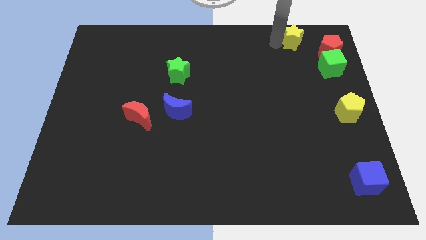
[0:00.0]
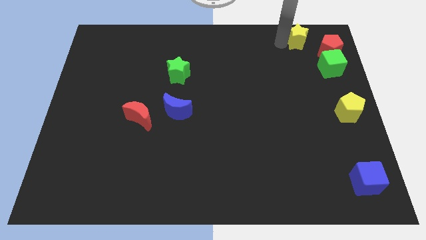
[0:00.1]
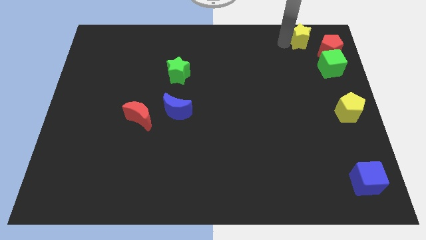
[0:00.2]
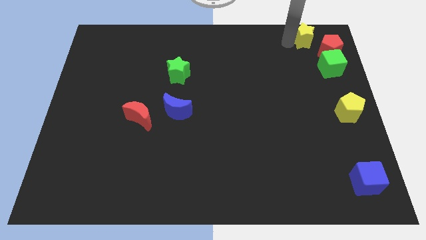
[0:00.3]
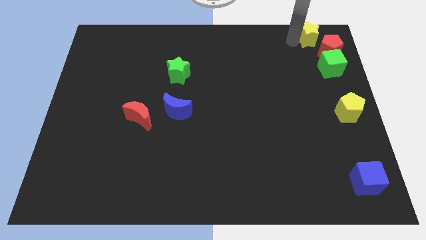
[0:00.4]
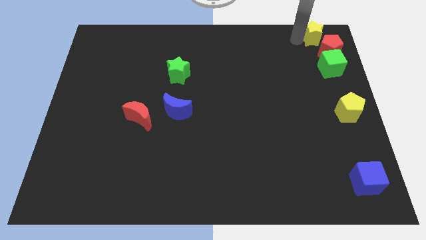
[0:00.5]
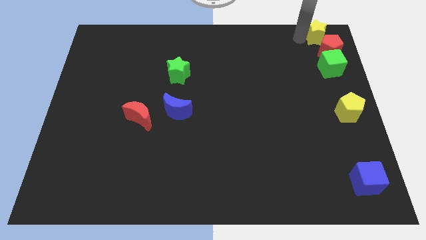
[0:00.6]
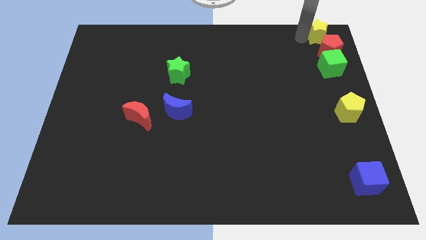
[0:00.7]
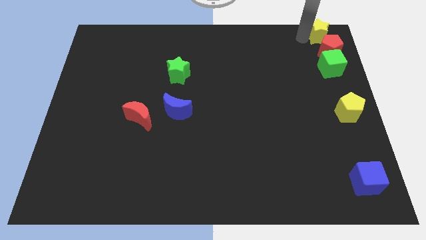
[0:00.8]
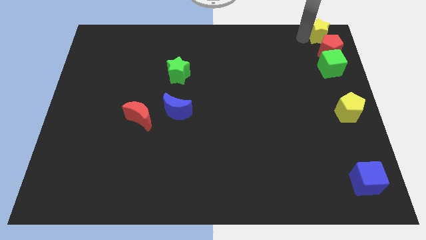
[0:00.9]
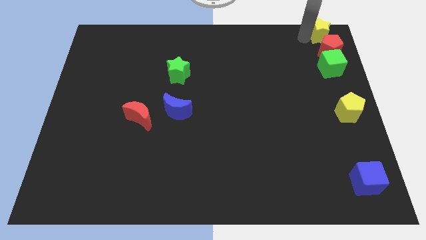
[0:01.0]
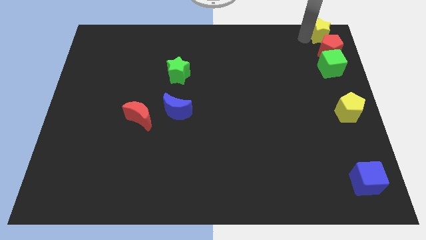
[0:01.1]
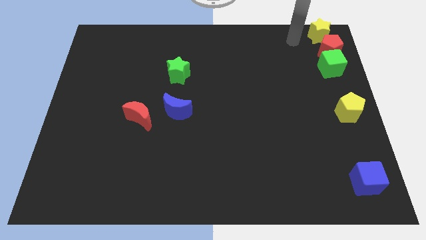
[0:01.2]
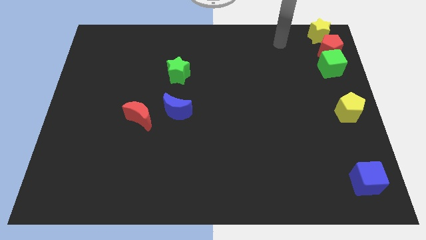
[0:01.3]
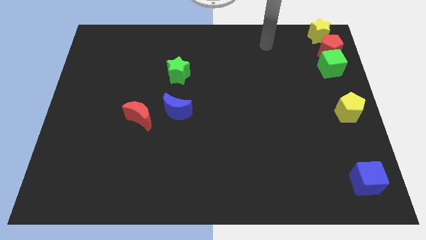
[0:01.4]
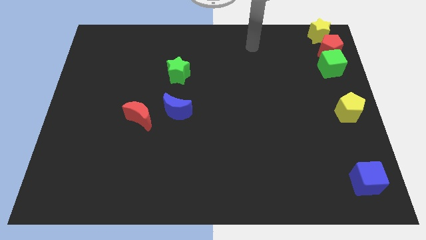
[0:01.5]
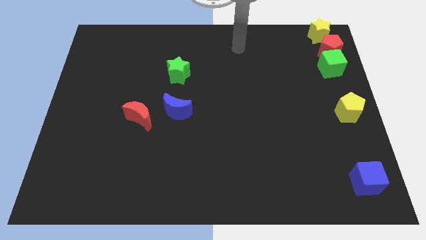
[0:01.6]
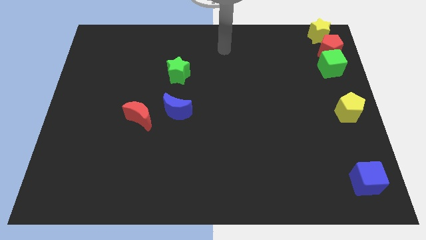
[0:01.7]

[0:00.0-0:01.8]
place the yellow star above the red pentagon

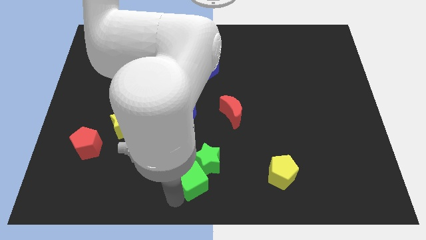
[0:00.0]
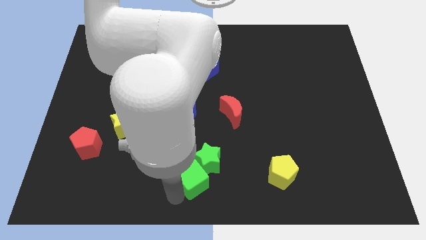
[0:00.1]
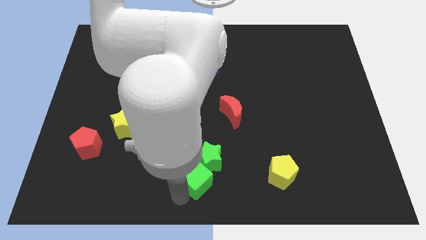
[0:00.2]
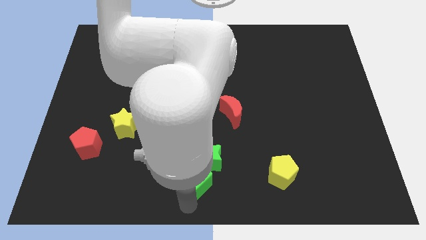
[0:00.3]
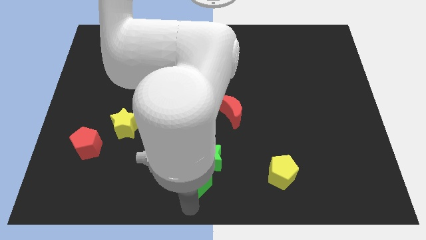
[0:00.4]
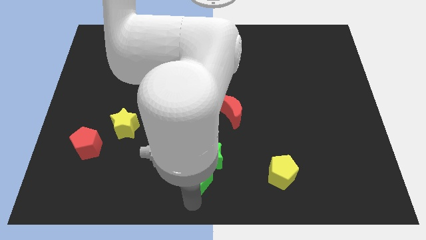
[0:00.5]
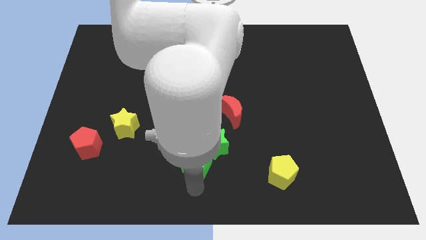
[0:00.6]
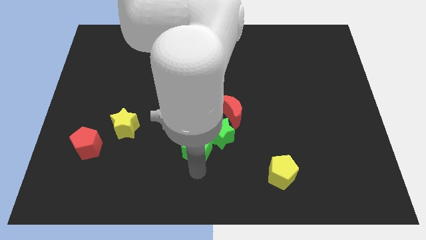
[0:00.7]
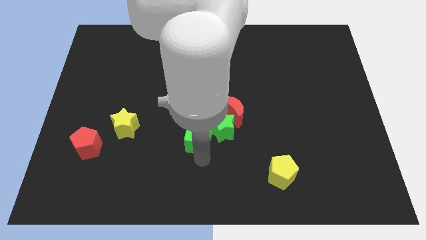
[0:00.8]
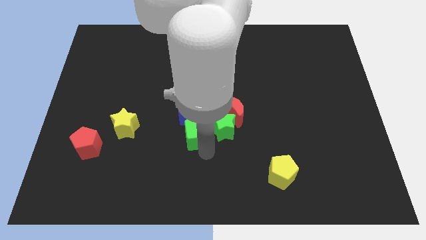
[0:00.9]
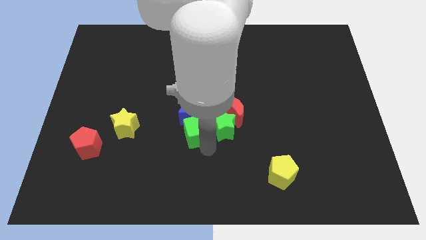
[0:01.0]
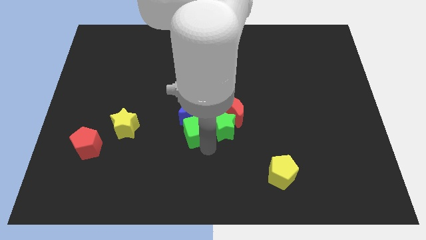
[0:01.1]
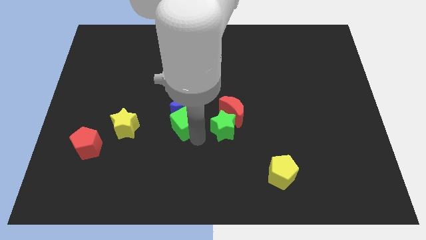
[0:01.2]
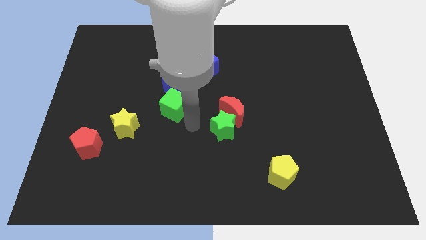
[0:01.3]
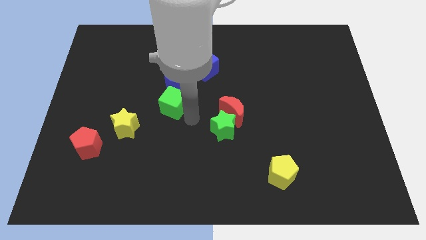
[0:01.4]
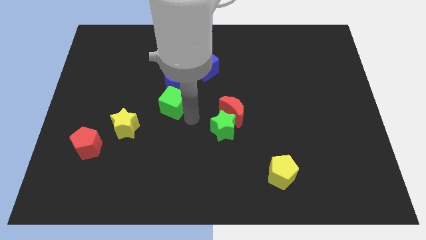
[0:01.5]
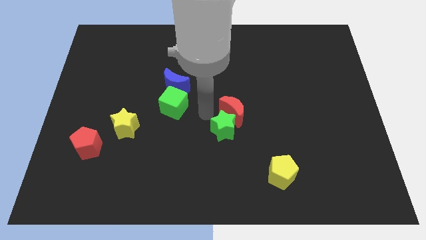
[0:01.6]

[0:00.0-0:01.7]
push the green cube into the blue crescent

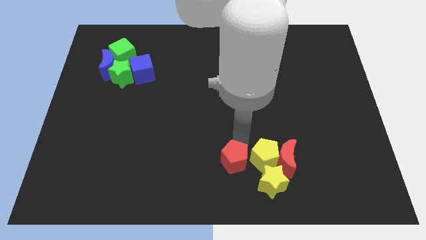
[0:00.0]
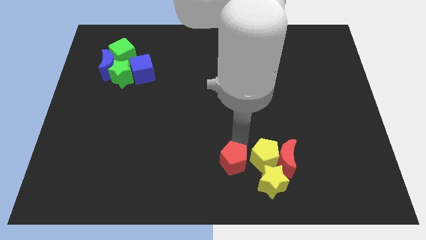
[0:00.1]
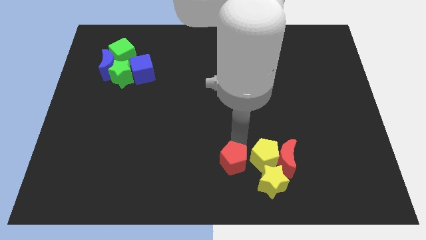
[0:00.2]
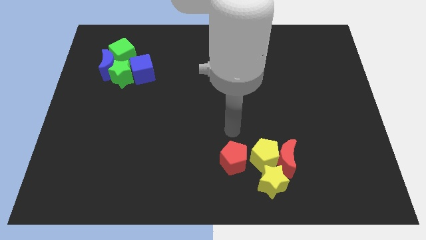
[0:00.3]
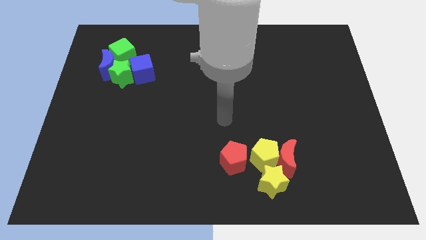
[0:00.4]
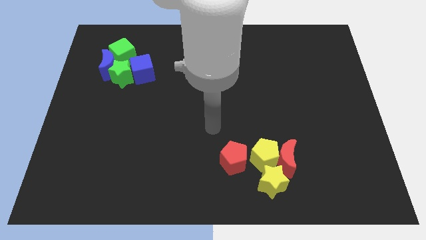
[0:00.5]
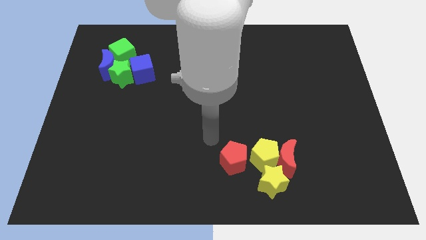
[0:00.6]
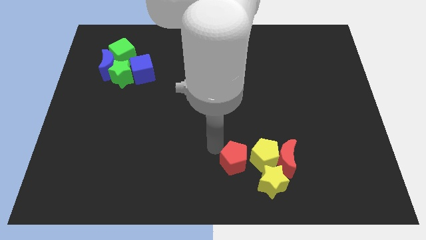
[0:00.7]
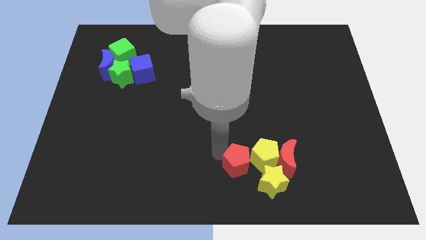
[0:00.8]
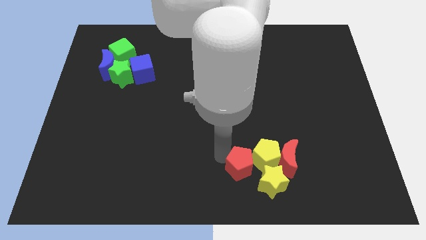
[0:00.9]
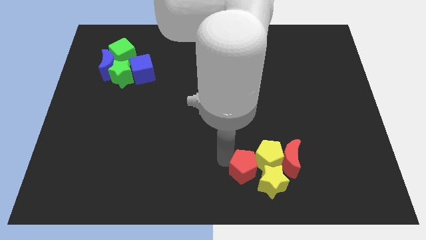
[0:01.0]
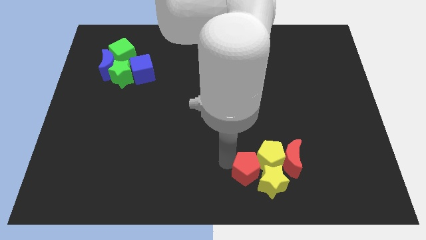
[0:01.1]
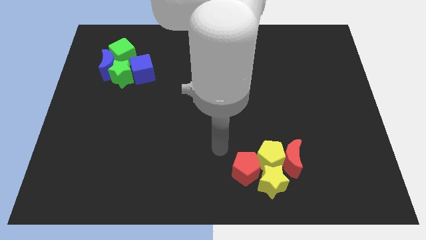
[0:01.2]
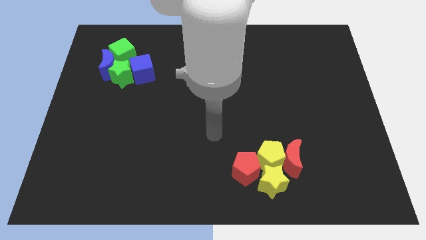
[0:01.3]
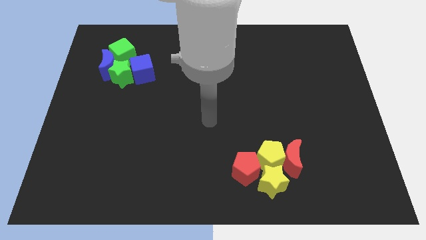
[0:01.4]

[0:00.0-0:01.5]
place red pentagon beside yellow star

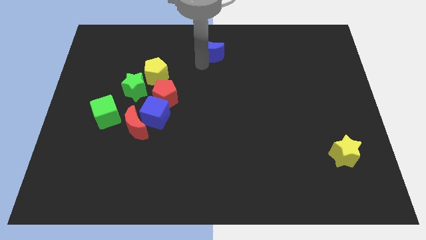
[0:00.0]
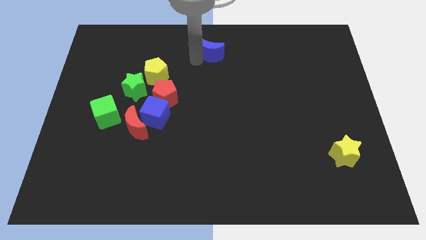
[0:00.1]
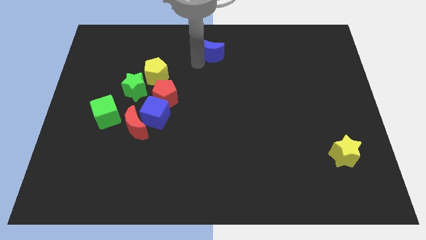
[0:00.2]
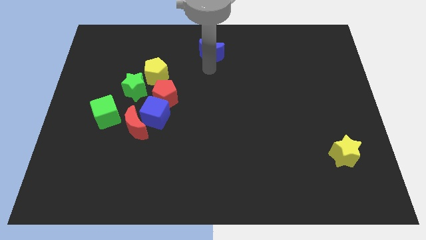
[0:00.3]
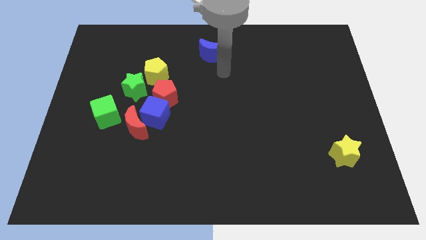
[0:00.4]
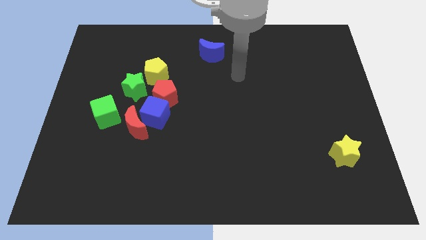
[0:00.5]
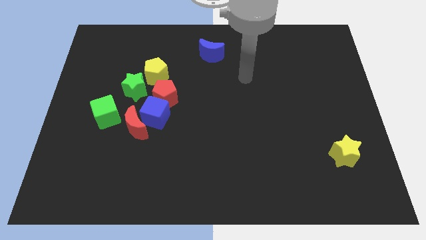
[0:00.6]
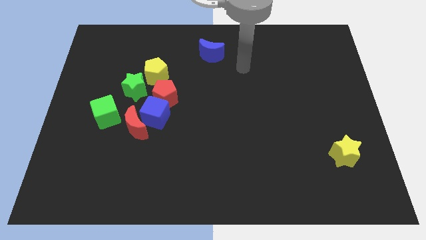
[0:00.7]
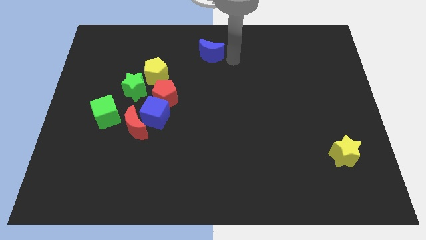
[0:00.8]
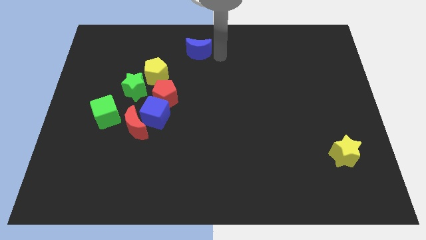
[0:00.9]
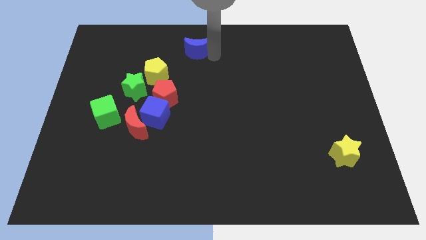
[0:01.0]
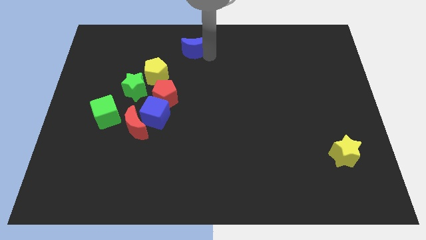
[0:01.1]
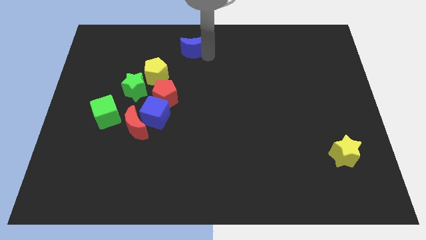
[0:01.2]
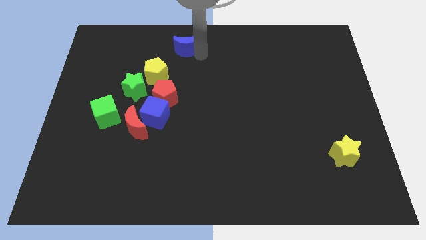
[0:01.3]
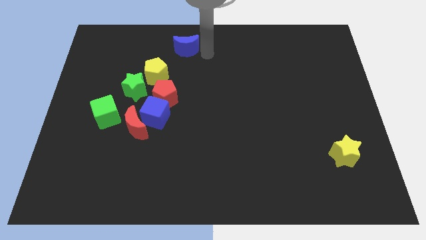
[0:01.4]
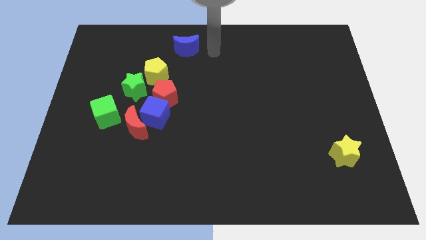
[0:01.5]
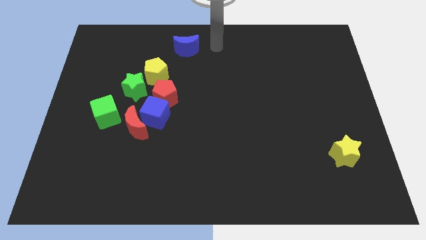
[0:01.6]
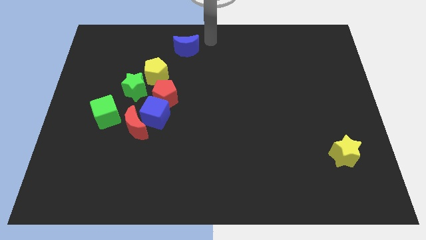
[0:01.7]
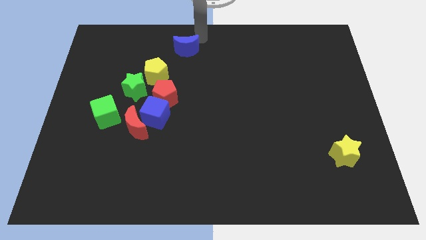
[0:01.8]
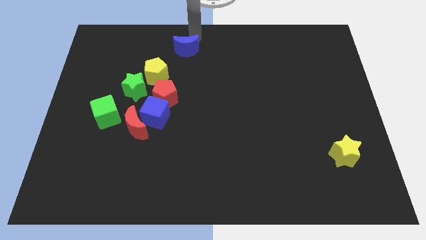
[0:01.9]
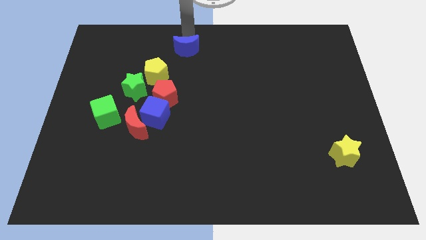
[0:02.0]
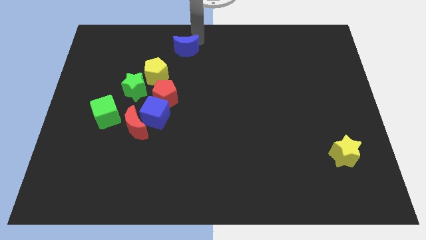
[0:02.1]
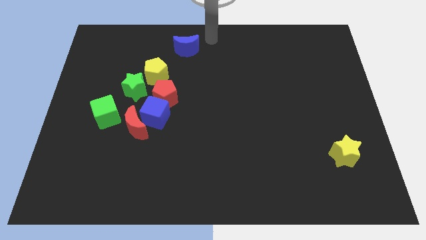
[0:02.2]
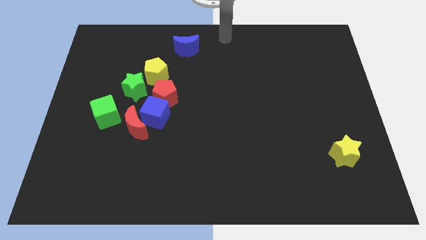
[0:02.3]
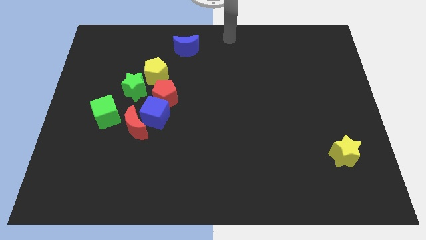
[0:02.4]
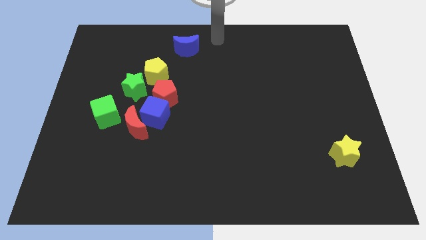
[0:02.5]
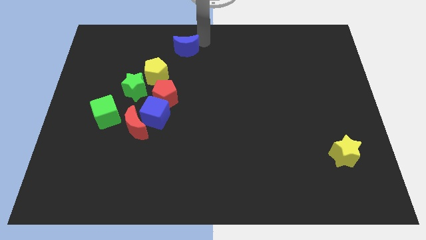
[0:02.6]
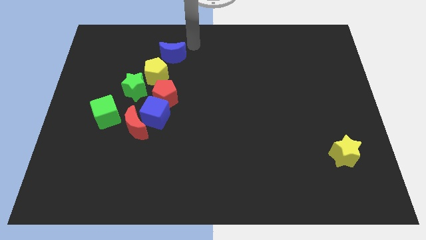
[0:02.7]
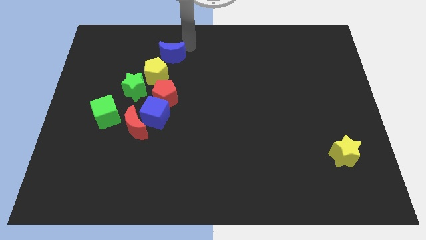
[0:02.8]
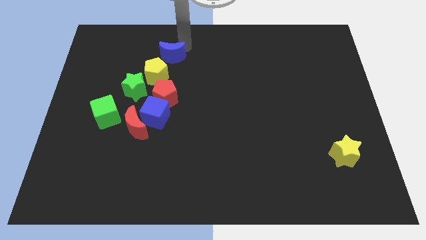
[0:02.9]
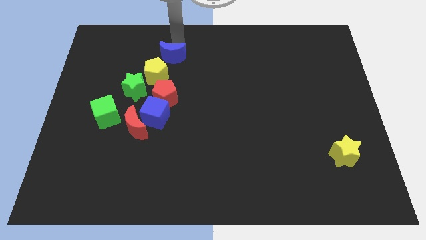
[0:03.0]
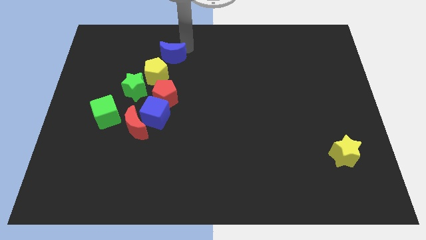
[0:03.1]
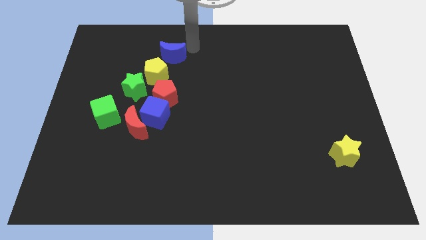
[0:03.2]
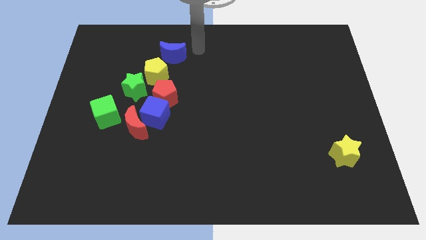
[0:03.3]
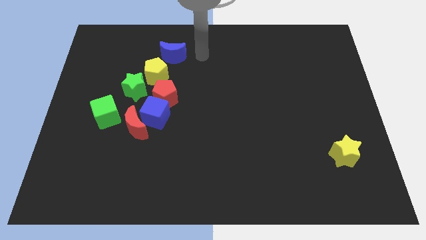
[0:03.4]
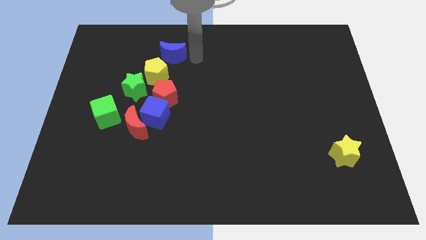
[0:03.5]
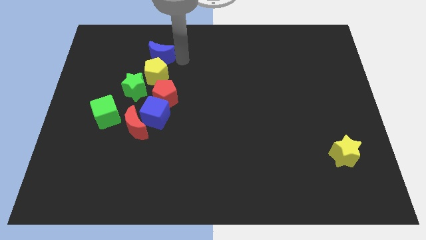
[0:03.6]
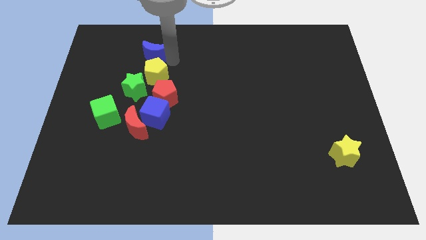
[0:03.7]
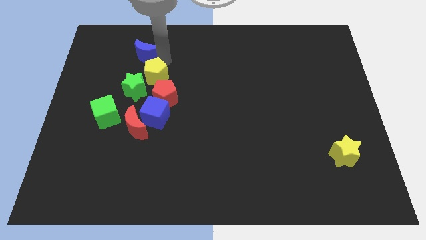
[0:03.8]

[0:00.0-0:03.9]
place blue moon to the top of yellow pentagon
